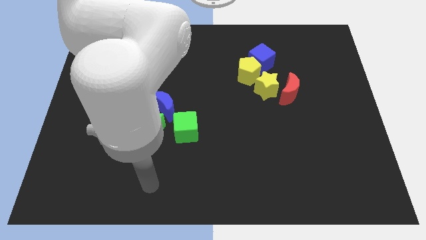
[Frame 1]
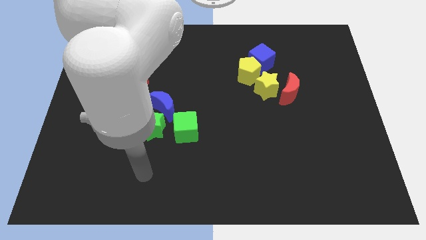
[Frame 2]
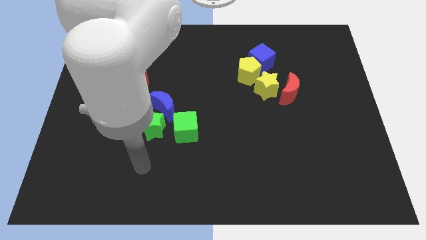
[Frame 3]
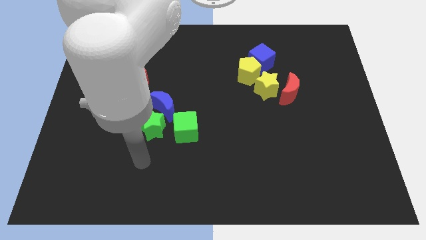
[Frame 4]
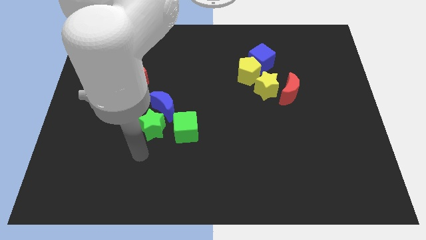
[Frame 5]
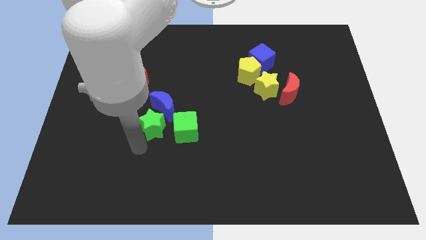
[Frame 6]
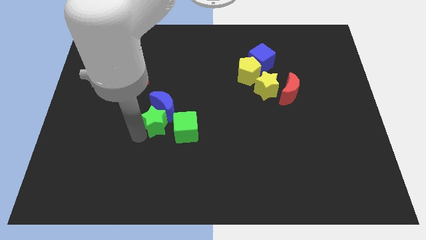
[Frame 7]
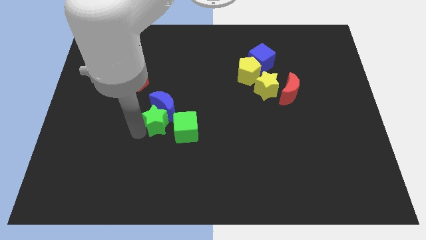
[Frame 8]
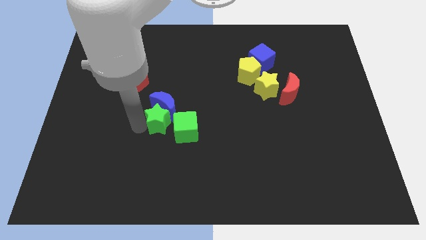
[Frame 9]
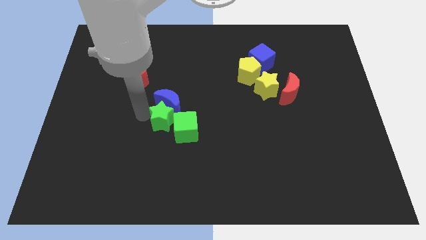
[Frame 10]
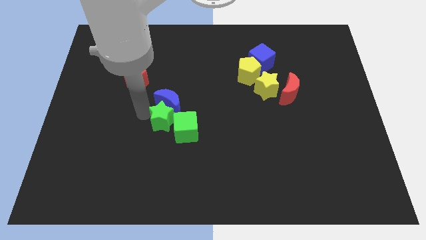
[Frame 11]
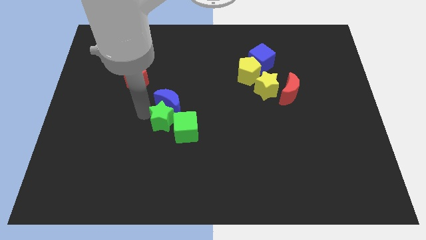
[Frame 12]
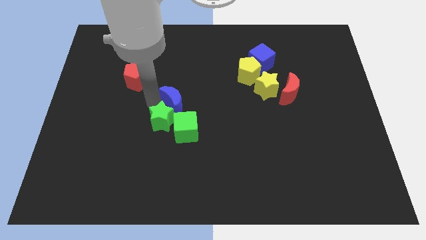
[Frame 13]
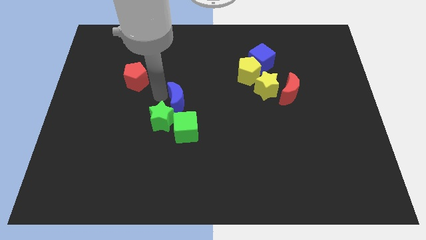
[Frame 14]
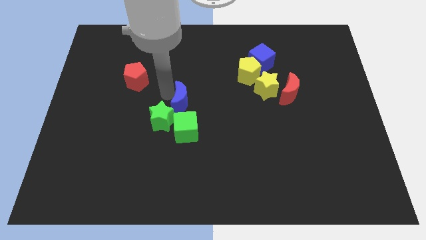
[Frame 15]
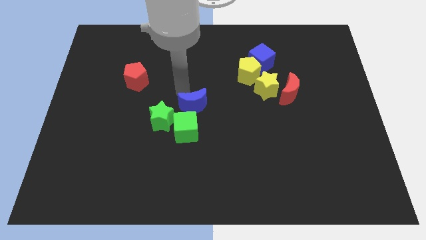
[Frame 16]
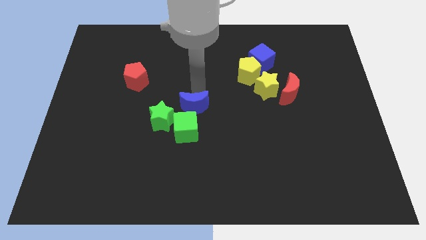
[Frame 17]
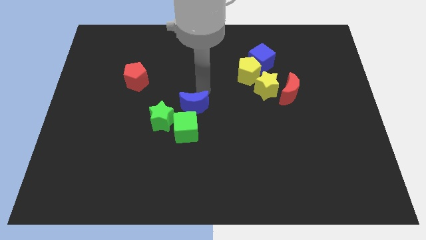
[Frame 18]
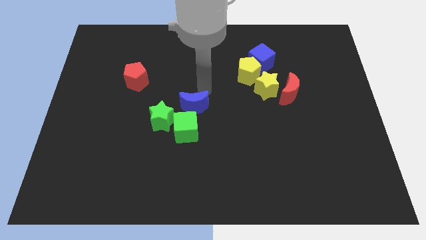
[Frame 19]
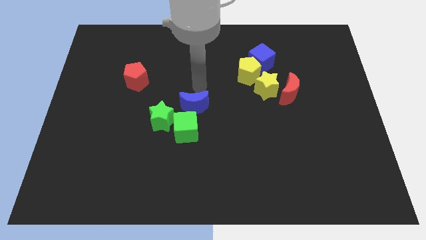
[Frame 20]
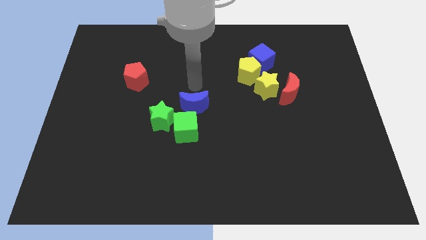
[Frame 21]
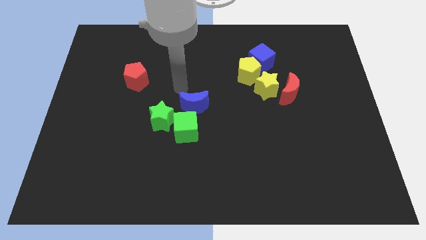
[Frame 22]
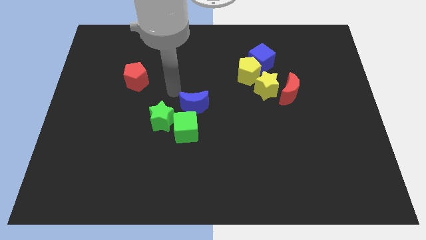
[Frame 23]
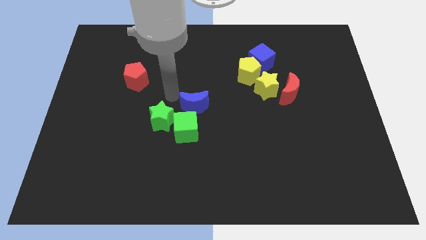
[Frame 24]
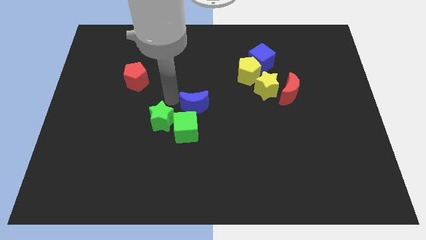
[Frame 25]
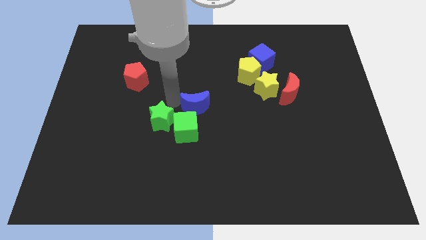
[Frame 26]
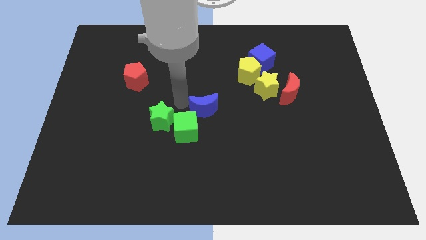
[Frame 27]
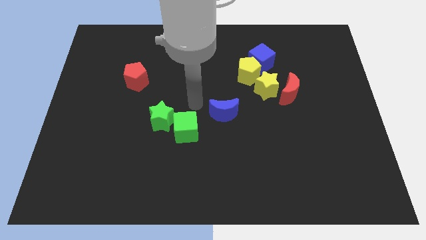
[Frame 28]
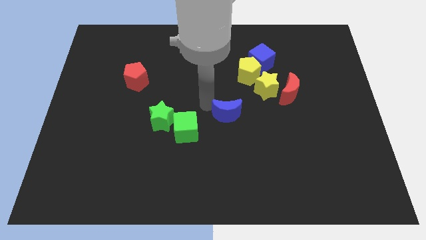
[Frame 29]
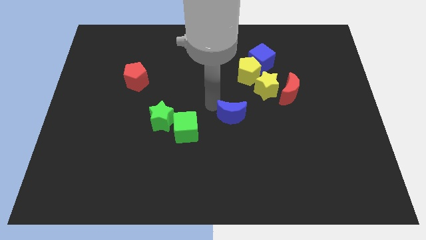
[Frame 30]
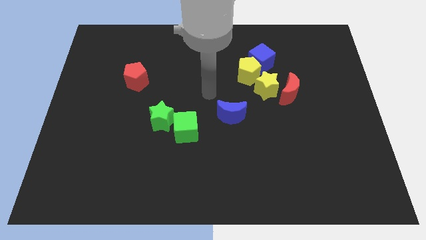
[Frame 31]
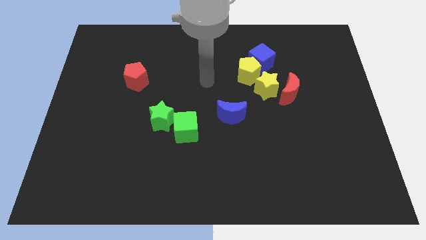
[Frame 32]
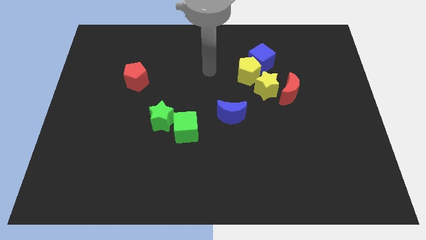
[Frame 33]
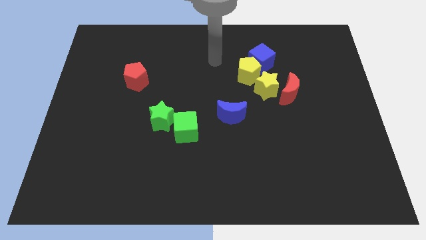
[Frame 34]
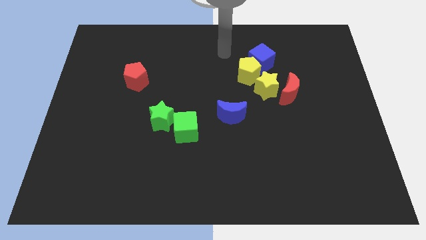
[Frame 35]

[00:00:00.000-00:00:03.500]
place the blue crescent diagonal to the green cube

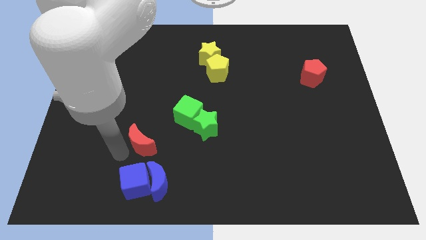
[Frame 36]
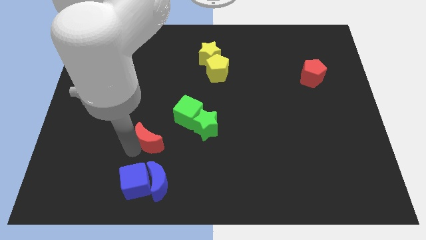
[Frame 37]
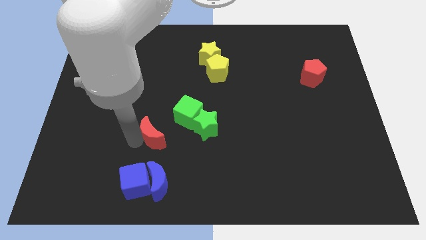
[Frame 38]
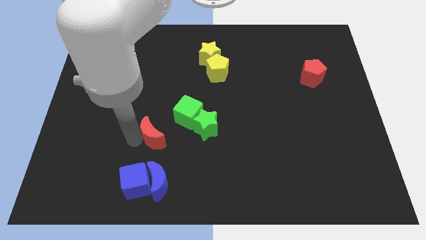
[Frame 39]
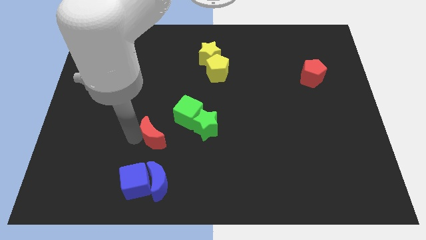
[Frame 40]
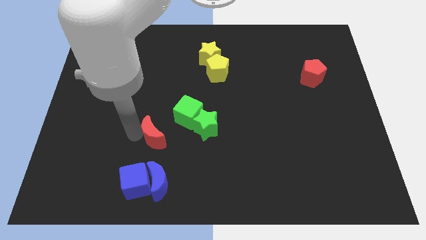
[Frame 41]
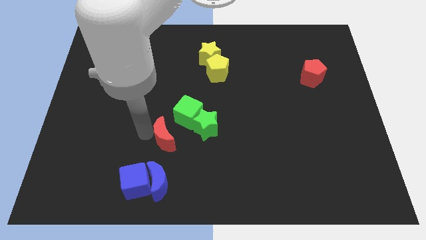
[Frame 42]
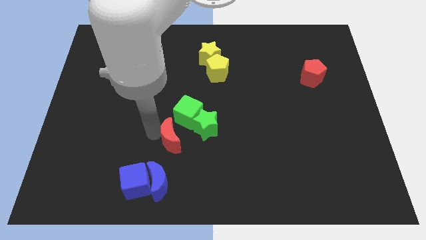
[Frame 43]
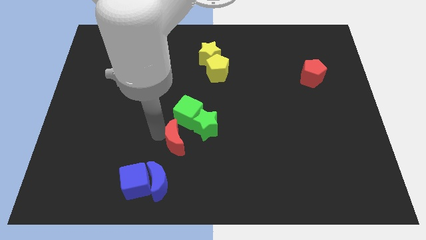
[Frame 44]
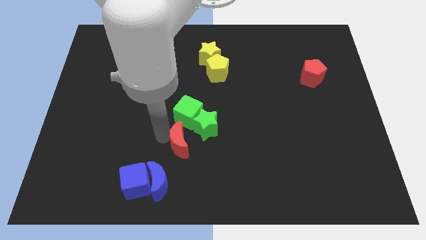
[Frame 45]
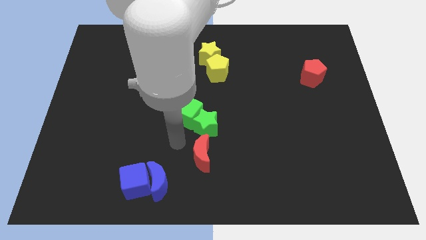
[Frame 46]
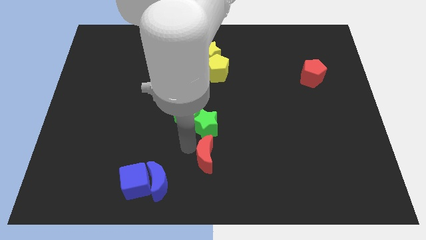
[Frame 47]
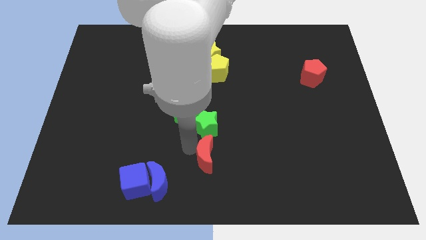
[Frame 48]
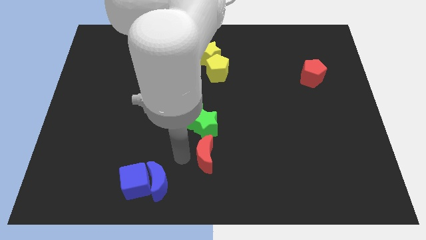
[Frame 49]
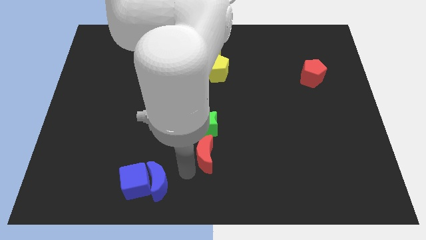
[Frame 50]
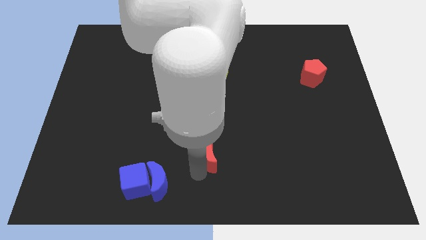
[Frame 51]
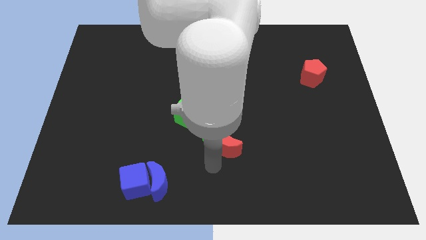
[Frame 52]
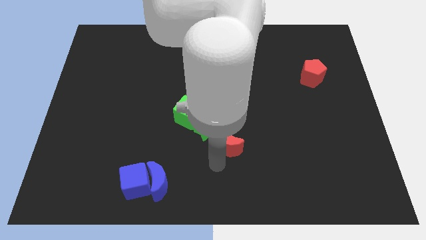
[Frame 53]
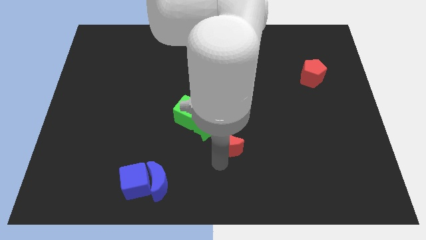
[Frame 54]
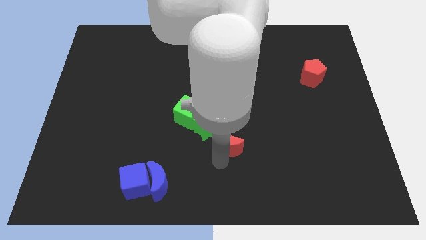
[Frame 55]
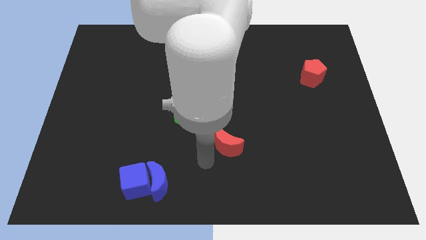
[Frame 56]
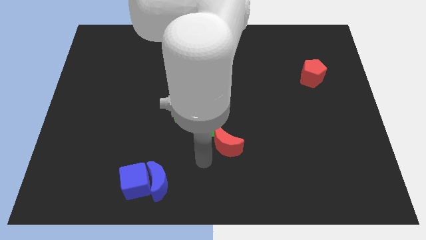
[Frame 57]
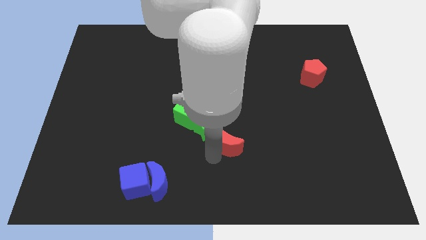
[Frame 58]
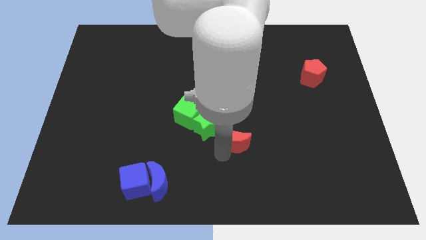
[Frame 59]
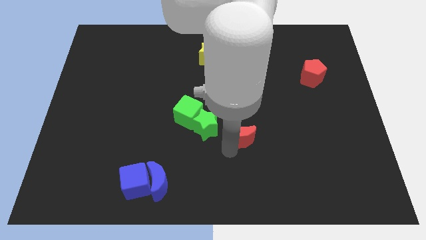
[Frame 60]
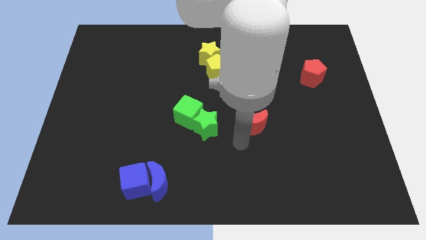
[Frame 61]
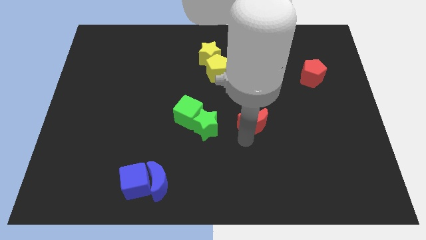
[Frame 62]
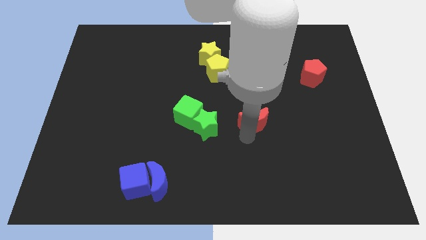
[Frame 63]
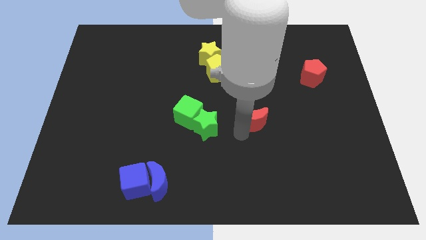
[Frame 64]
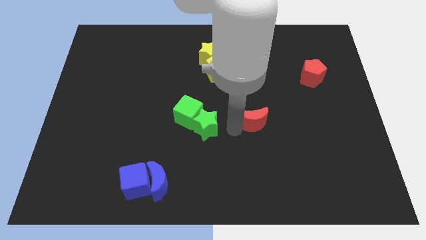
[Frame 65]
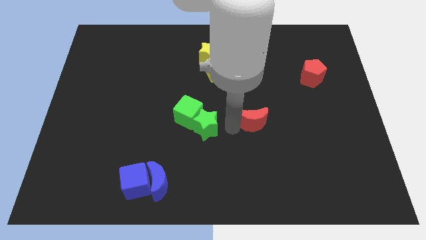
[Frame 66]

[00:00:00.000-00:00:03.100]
move the red crescent to the right of the group of green blocks

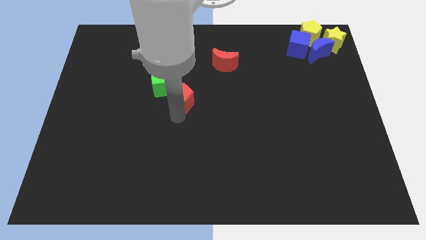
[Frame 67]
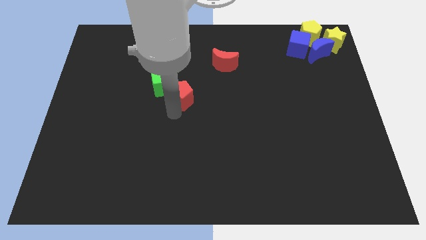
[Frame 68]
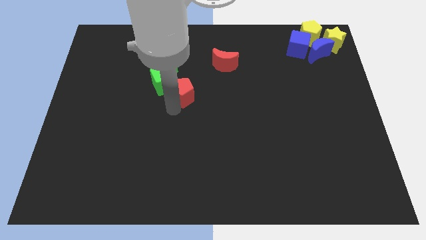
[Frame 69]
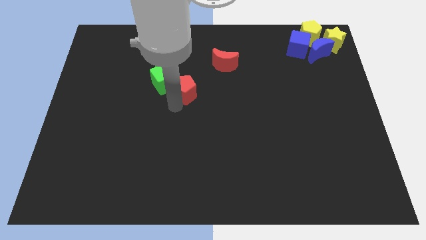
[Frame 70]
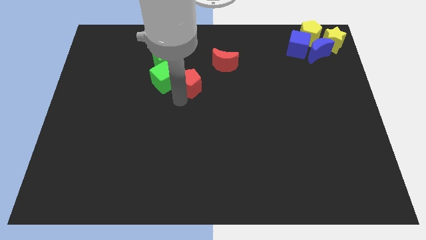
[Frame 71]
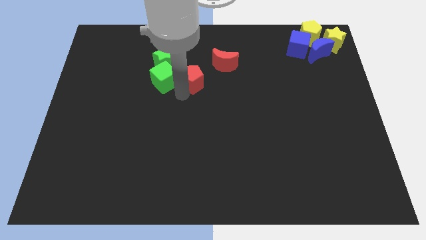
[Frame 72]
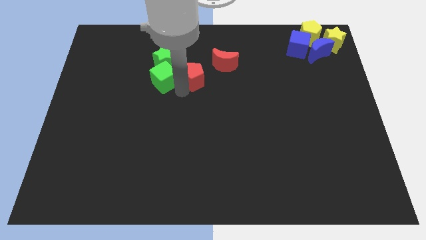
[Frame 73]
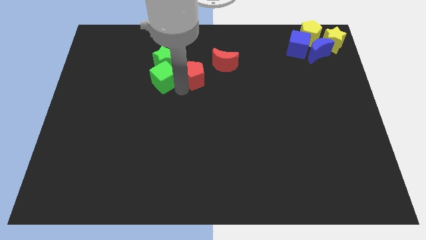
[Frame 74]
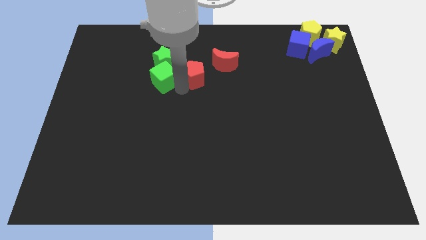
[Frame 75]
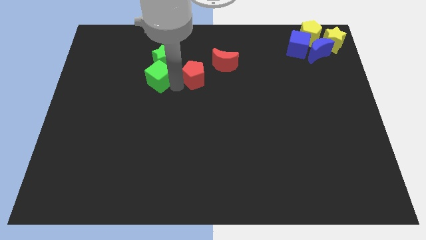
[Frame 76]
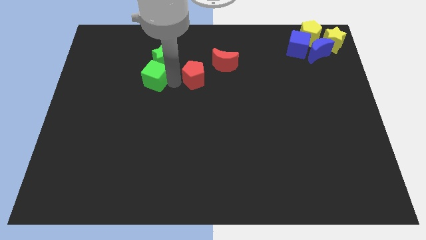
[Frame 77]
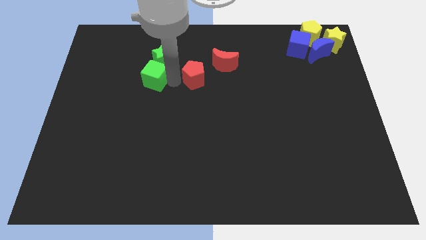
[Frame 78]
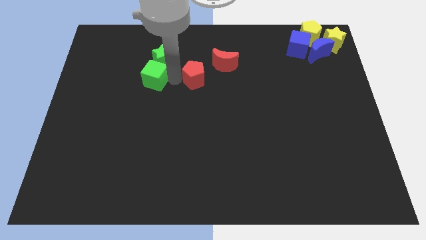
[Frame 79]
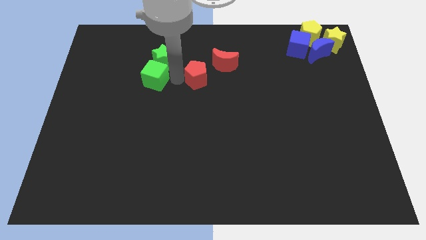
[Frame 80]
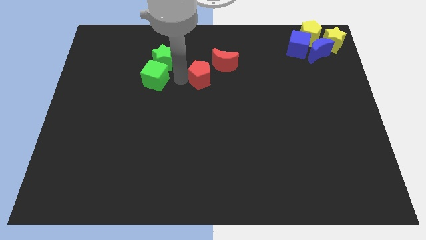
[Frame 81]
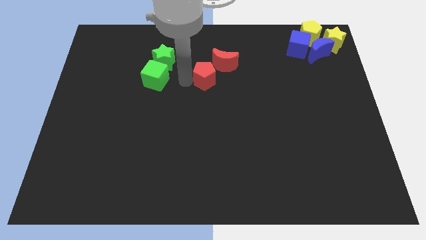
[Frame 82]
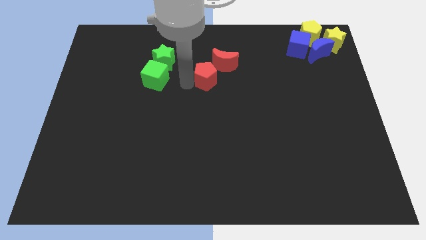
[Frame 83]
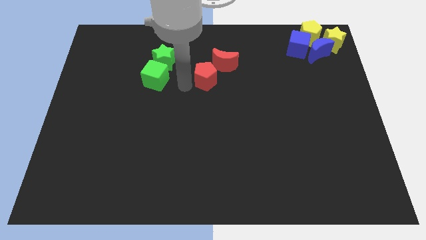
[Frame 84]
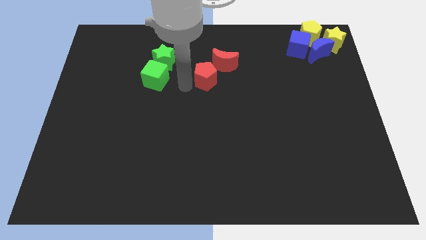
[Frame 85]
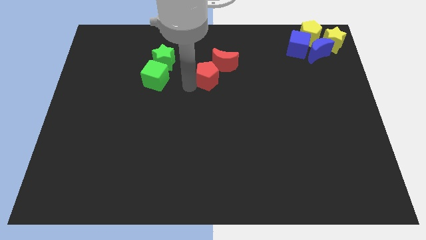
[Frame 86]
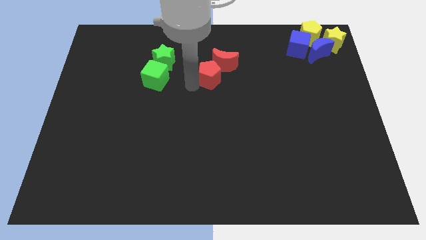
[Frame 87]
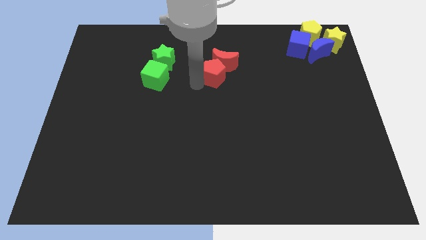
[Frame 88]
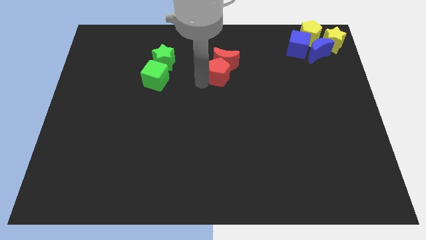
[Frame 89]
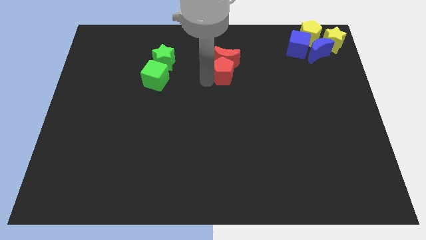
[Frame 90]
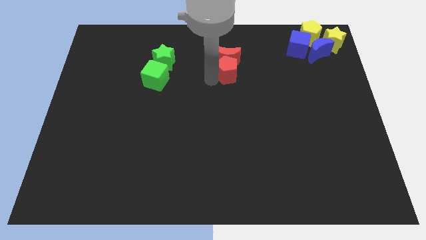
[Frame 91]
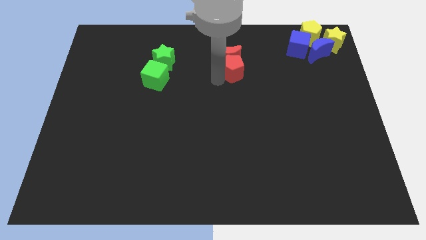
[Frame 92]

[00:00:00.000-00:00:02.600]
place the red pentagon below the red moon
